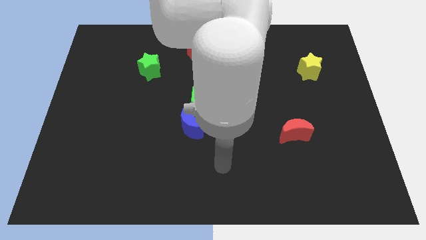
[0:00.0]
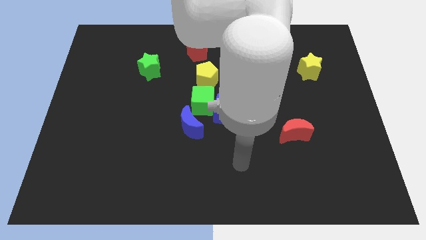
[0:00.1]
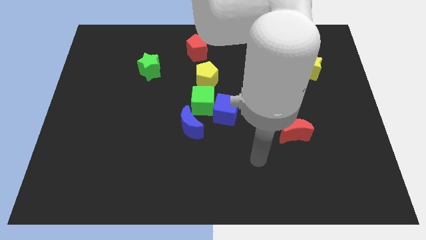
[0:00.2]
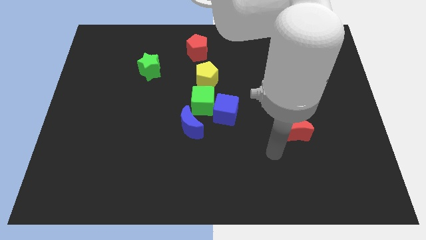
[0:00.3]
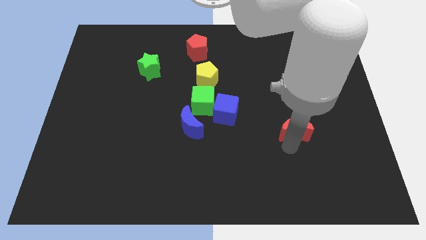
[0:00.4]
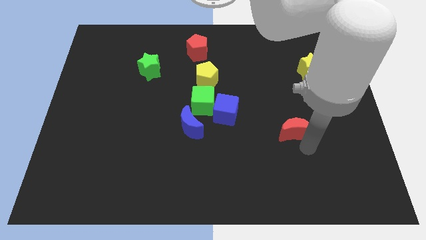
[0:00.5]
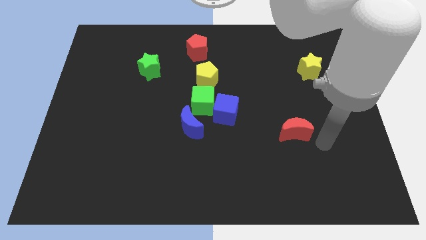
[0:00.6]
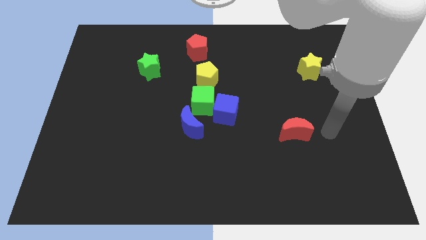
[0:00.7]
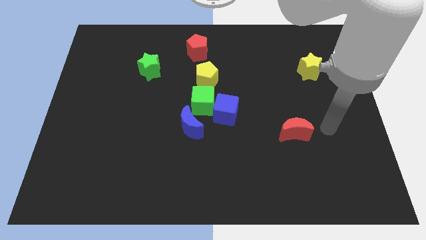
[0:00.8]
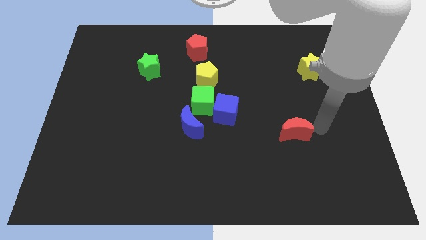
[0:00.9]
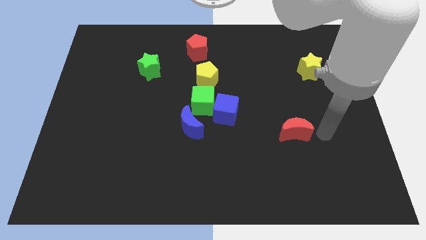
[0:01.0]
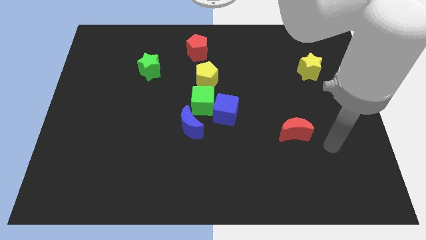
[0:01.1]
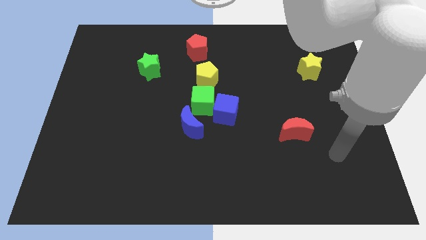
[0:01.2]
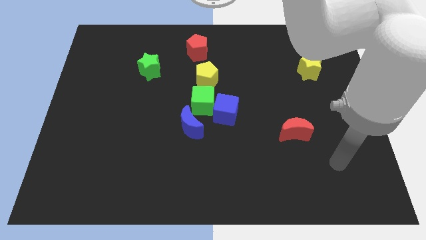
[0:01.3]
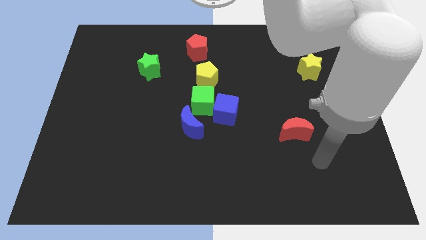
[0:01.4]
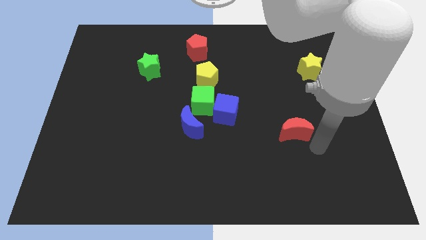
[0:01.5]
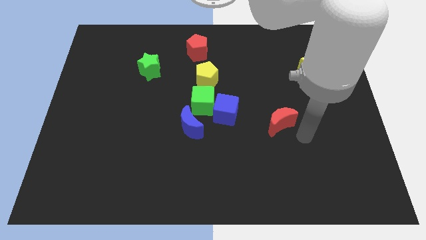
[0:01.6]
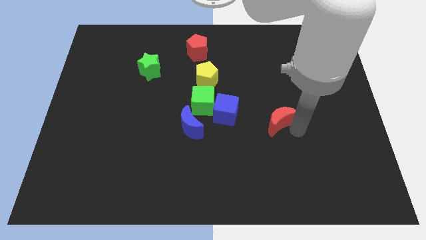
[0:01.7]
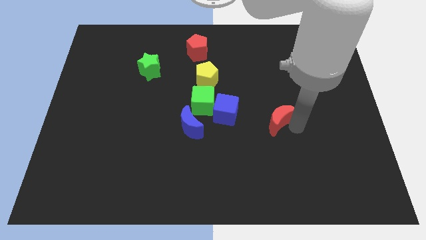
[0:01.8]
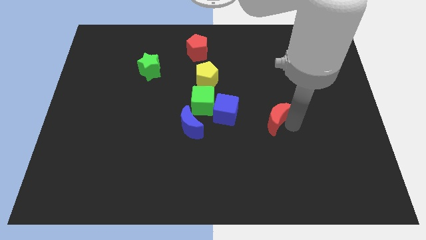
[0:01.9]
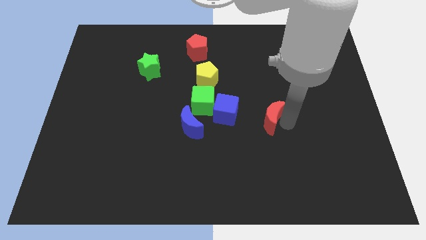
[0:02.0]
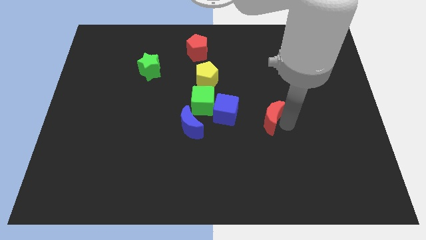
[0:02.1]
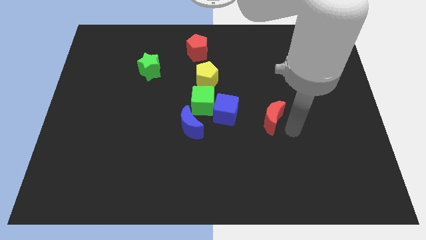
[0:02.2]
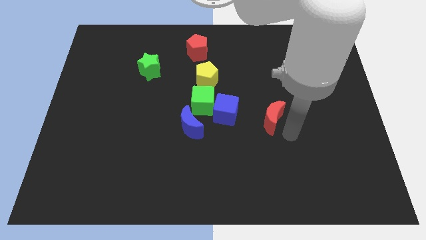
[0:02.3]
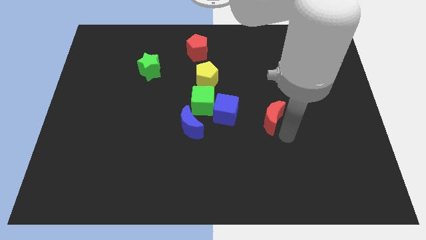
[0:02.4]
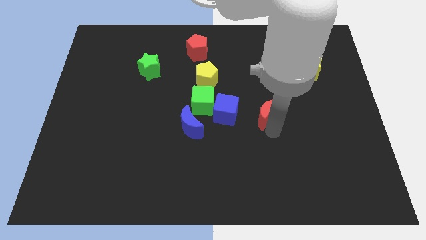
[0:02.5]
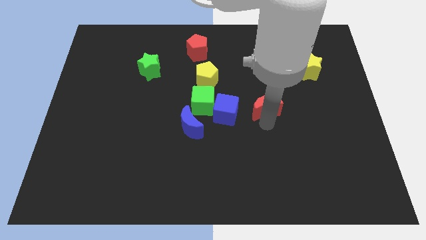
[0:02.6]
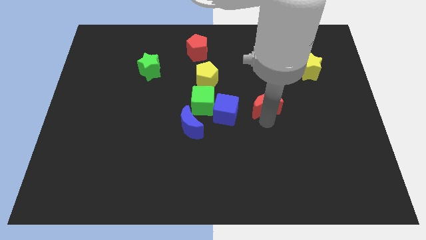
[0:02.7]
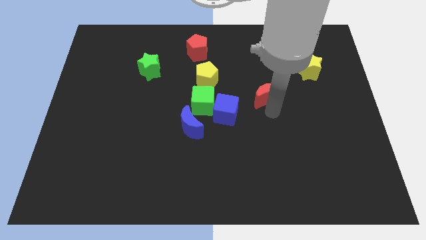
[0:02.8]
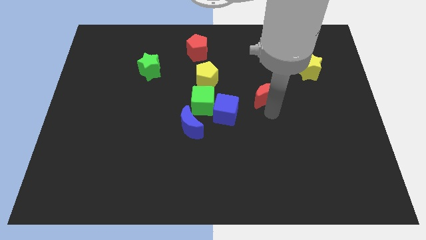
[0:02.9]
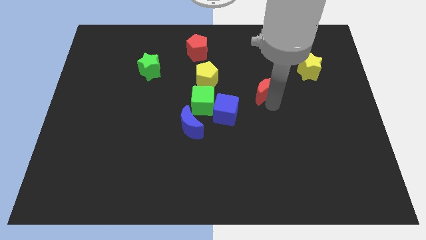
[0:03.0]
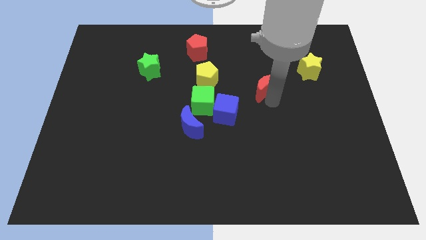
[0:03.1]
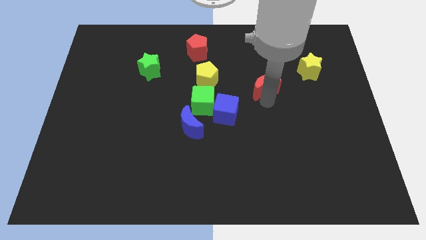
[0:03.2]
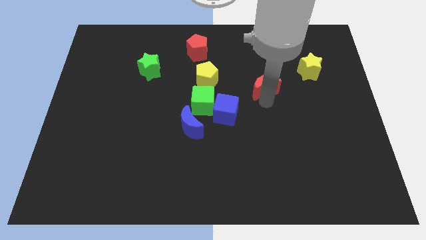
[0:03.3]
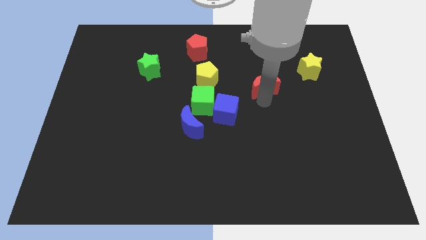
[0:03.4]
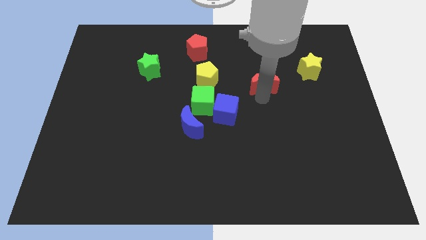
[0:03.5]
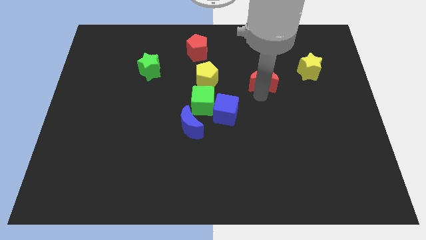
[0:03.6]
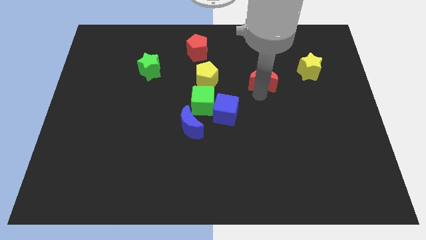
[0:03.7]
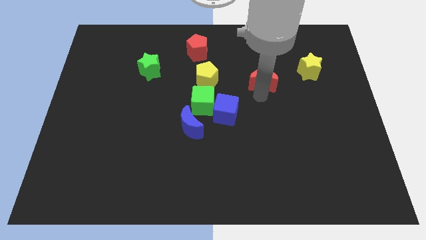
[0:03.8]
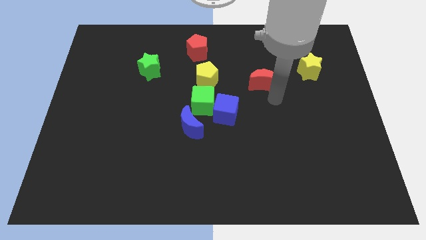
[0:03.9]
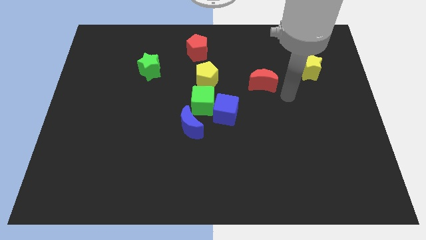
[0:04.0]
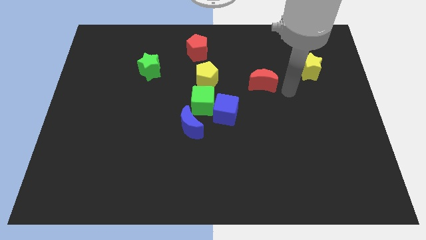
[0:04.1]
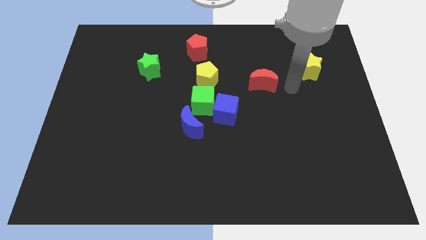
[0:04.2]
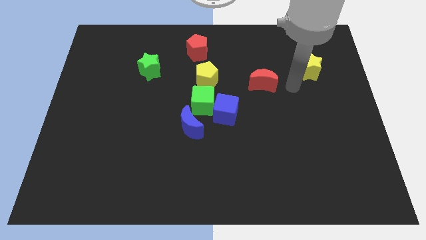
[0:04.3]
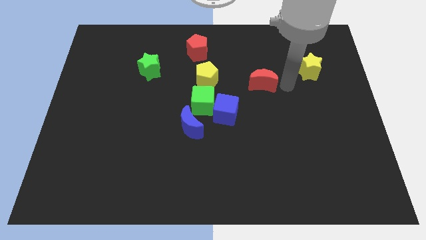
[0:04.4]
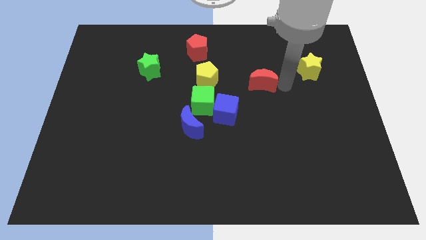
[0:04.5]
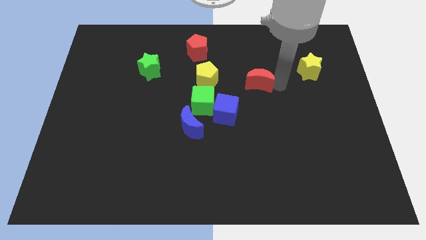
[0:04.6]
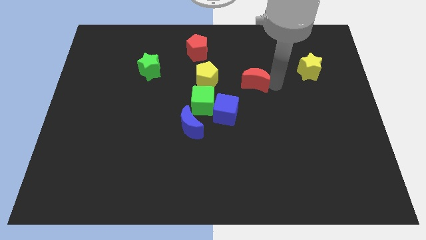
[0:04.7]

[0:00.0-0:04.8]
place the red crescent in between the yellow pentagon and the yellow star

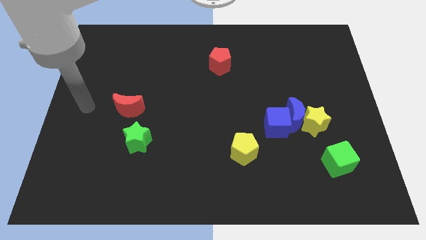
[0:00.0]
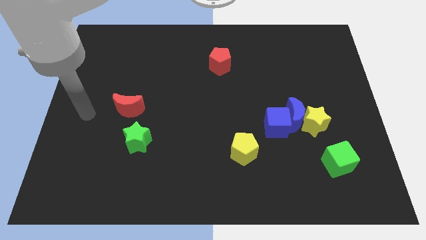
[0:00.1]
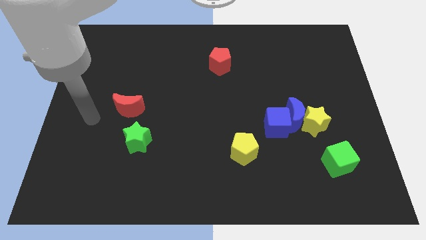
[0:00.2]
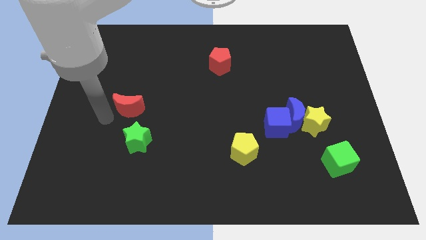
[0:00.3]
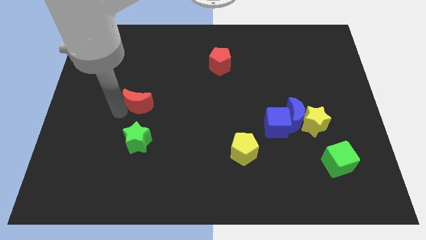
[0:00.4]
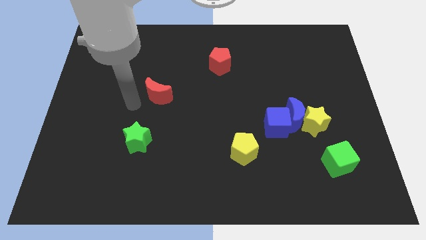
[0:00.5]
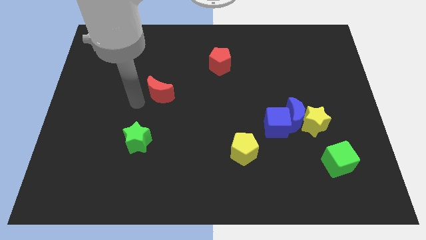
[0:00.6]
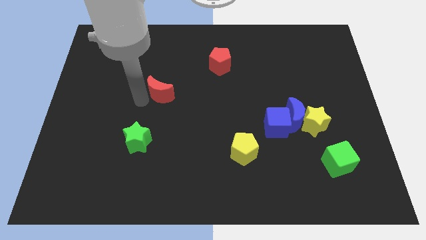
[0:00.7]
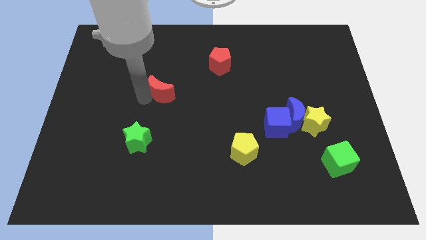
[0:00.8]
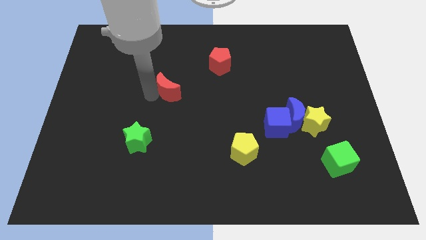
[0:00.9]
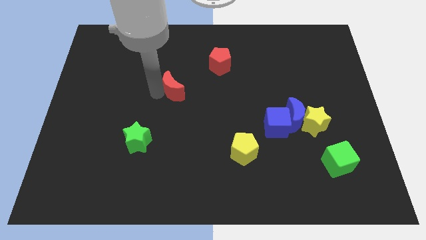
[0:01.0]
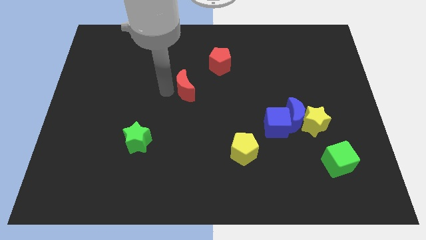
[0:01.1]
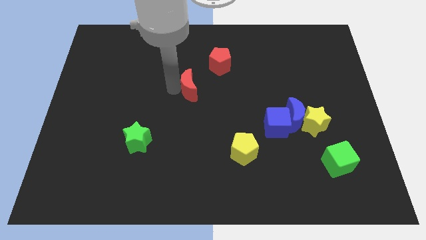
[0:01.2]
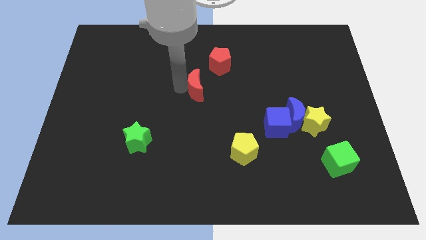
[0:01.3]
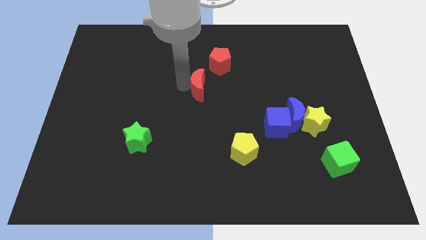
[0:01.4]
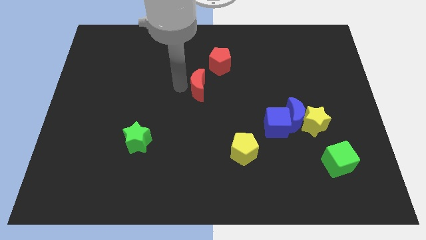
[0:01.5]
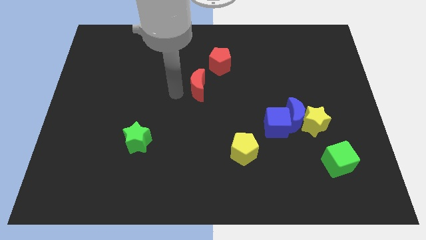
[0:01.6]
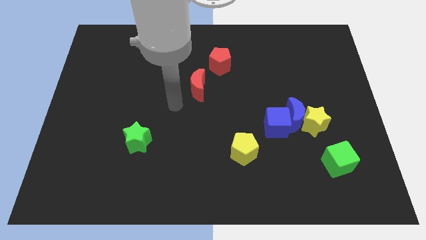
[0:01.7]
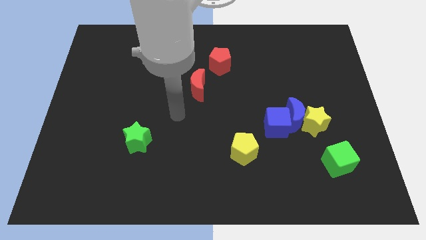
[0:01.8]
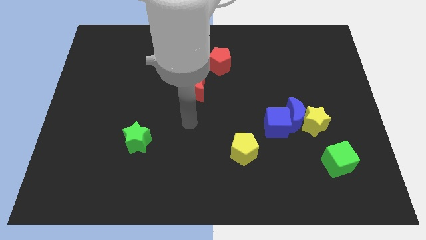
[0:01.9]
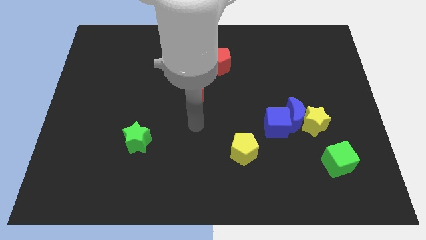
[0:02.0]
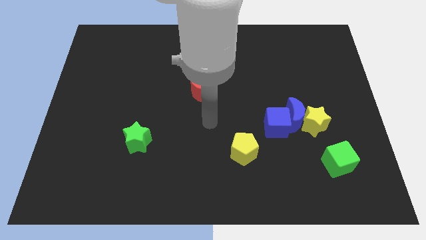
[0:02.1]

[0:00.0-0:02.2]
place the red moon to the left bottom side of the red pentagon

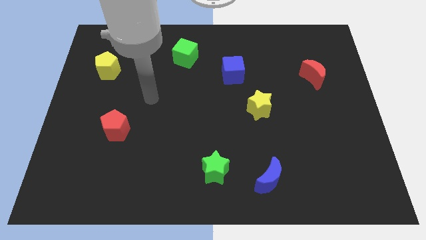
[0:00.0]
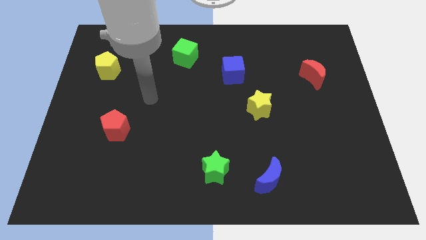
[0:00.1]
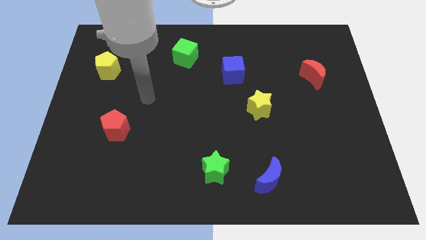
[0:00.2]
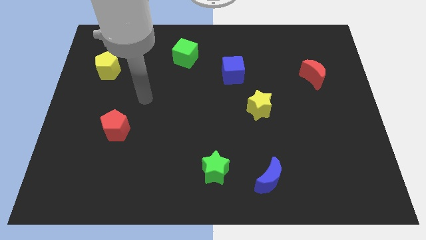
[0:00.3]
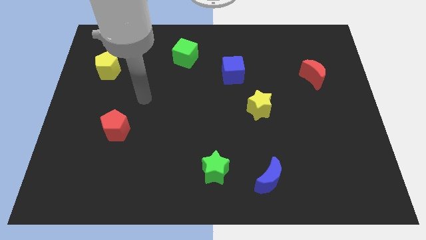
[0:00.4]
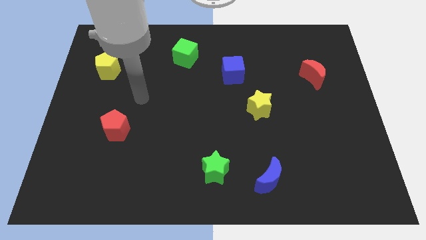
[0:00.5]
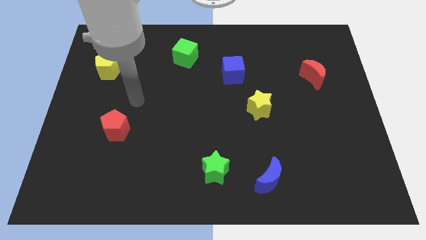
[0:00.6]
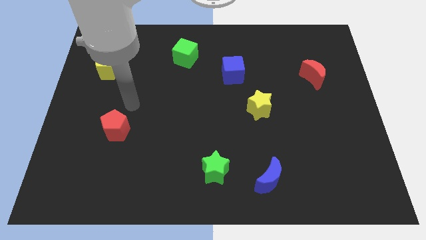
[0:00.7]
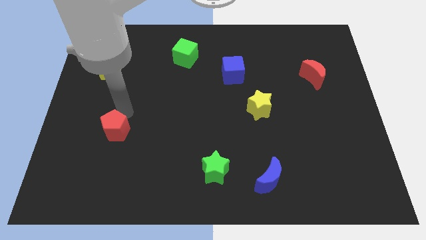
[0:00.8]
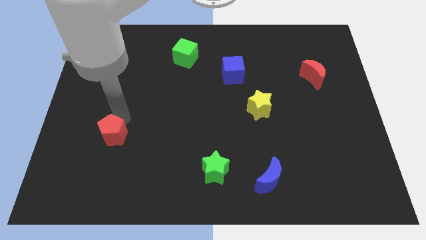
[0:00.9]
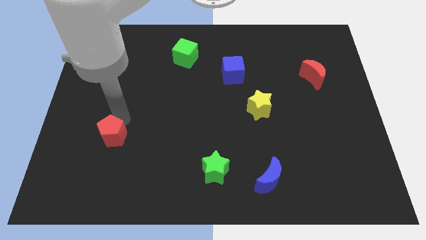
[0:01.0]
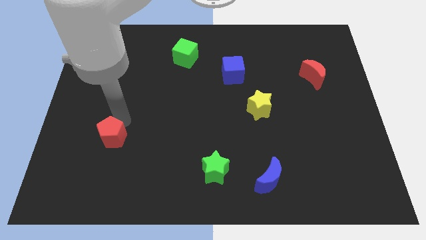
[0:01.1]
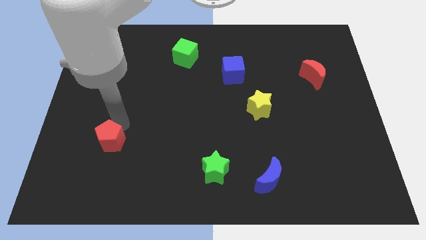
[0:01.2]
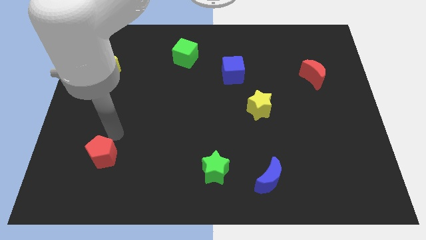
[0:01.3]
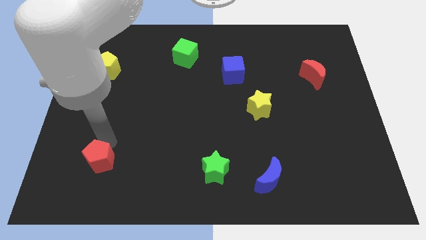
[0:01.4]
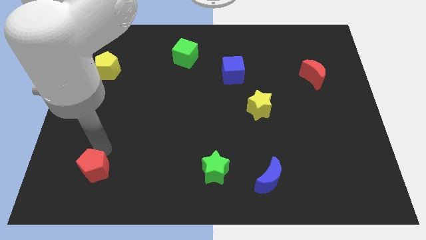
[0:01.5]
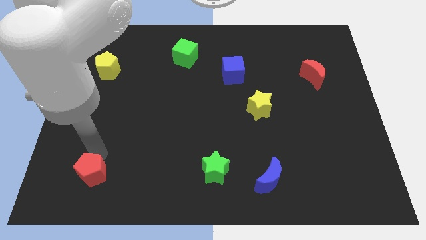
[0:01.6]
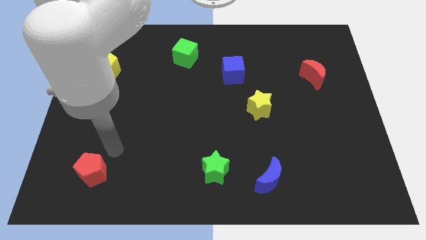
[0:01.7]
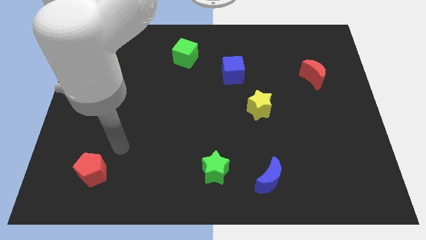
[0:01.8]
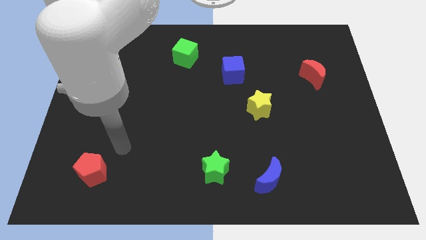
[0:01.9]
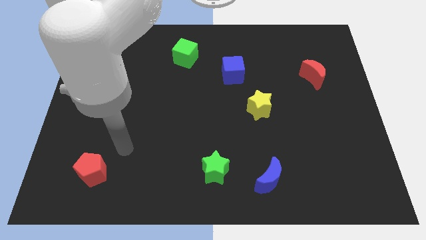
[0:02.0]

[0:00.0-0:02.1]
put the red pentagon parallel to the green star
